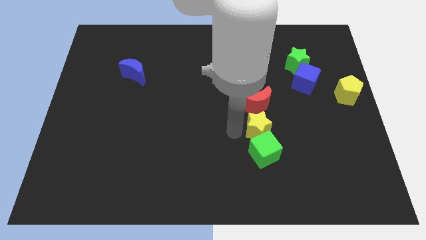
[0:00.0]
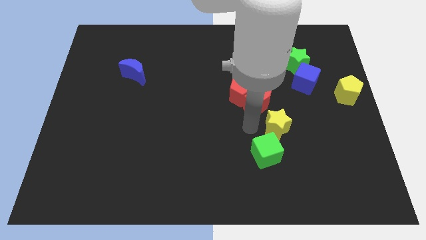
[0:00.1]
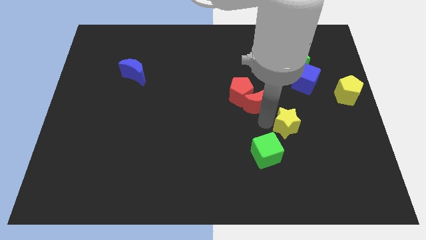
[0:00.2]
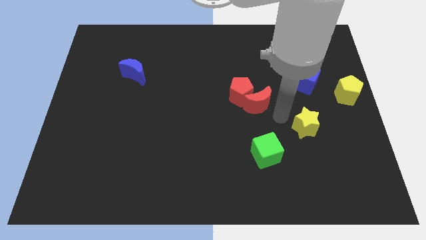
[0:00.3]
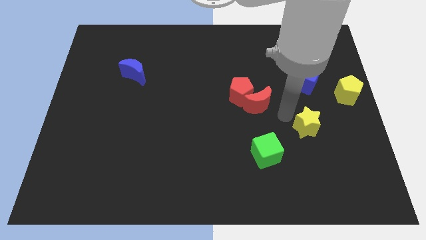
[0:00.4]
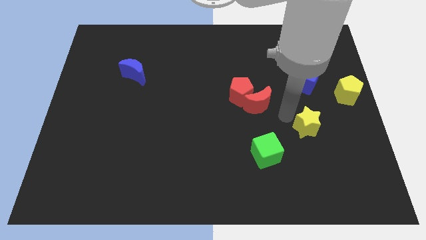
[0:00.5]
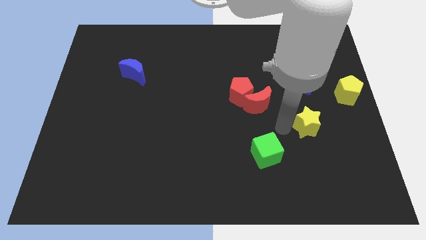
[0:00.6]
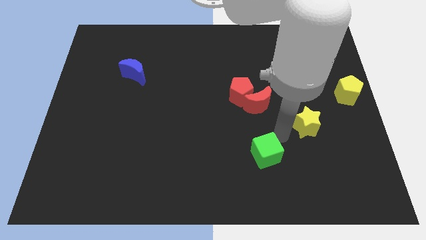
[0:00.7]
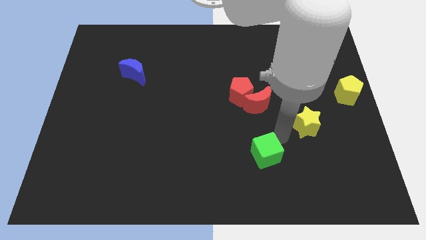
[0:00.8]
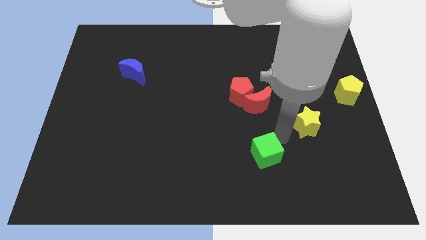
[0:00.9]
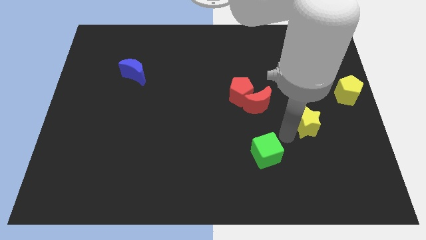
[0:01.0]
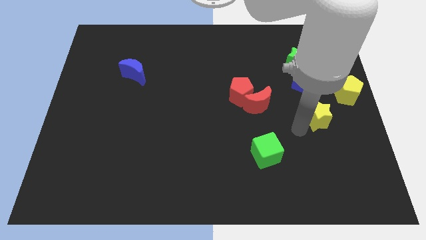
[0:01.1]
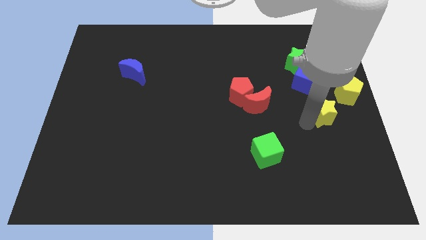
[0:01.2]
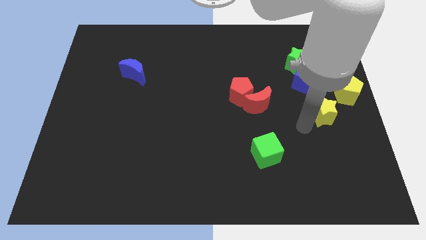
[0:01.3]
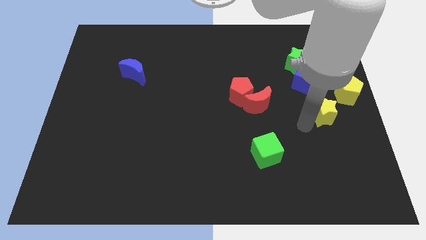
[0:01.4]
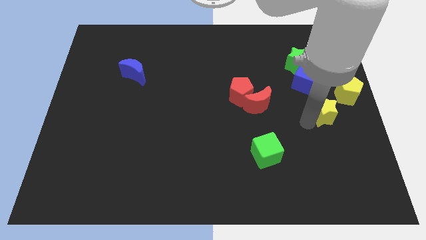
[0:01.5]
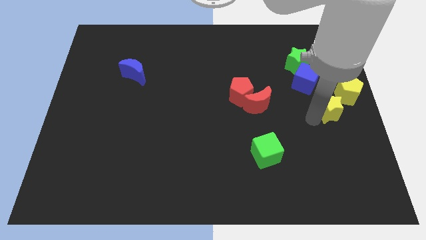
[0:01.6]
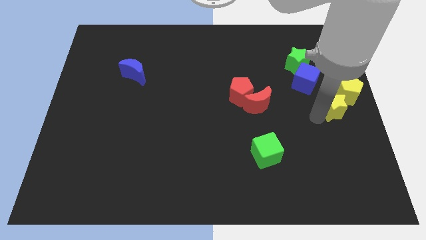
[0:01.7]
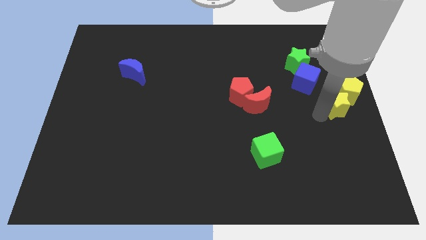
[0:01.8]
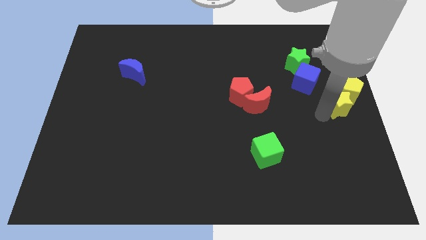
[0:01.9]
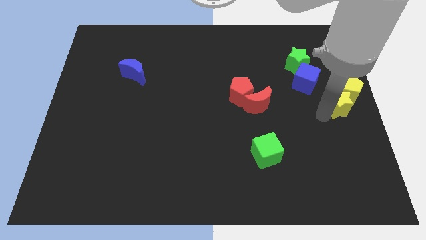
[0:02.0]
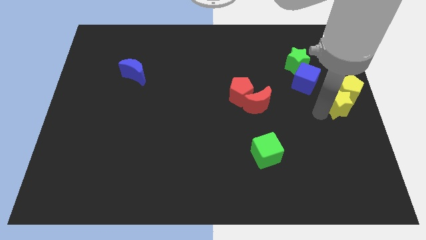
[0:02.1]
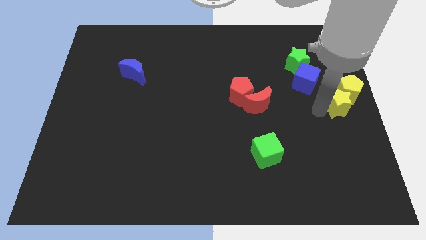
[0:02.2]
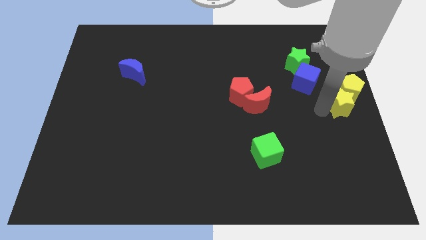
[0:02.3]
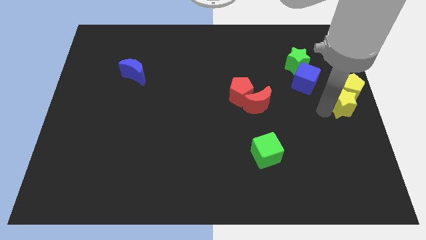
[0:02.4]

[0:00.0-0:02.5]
slide the yellow star into the yellow pentagon

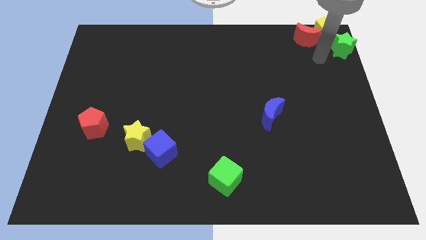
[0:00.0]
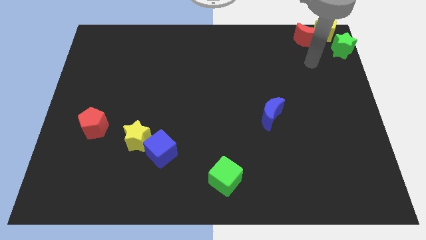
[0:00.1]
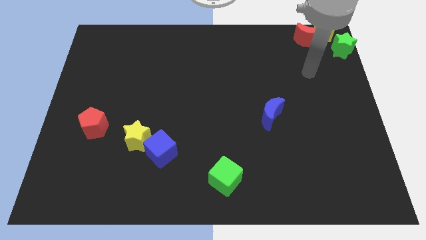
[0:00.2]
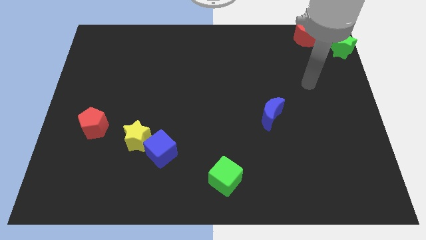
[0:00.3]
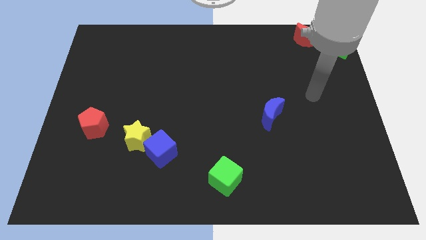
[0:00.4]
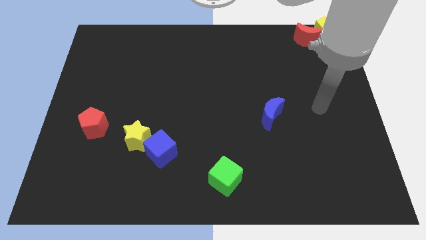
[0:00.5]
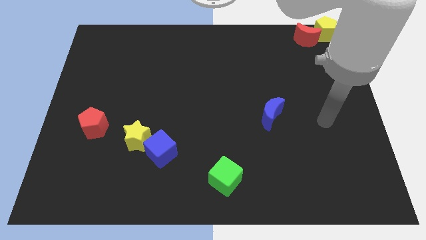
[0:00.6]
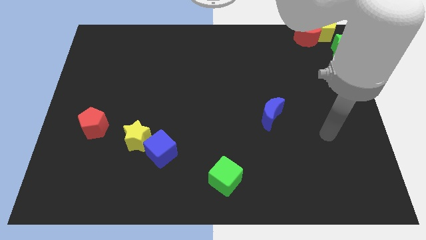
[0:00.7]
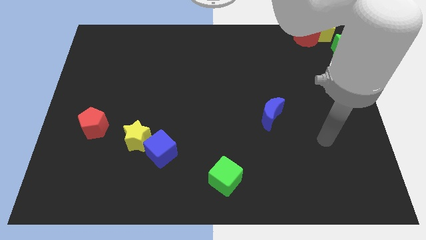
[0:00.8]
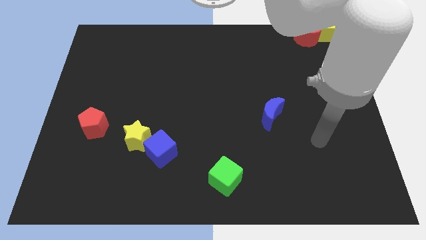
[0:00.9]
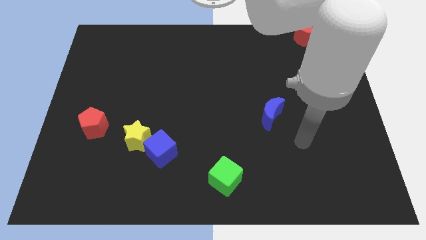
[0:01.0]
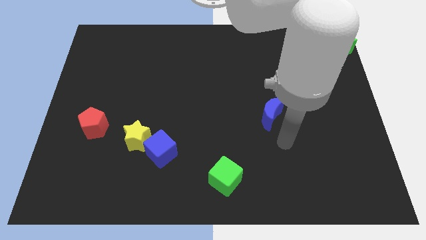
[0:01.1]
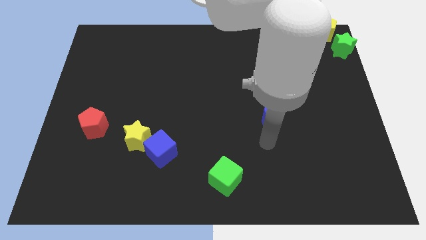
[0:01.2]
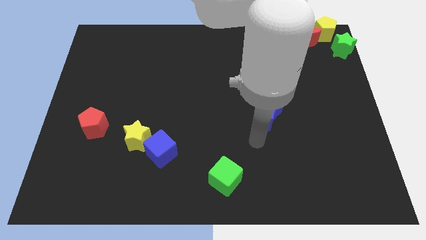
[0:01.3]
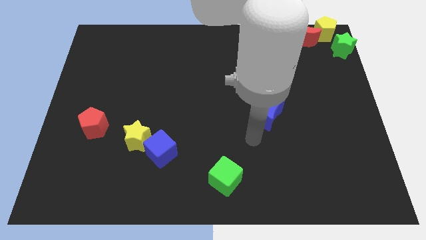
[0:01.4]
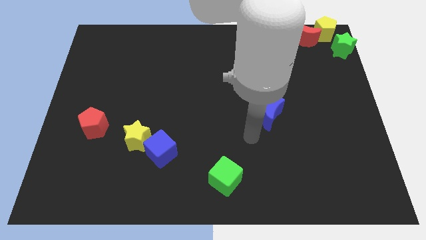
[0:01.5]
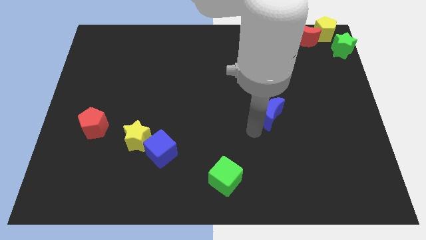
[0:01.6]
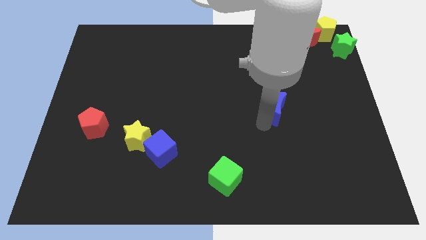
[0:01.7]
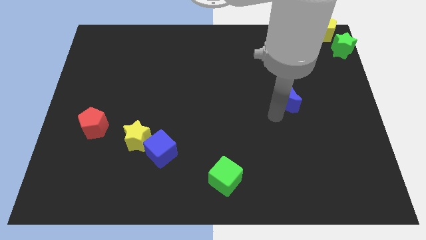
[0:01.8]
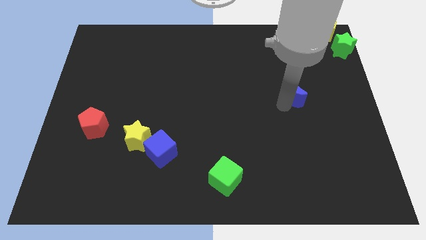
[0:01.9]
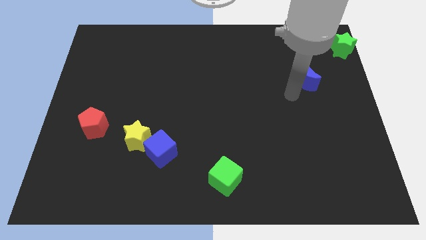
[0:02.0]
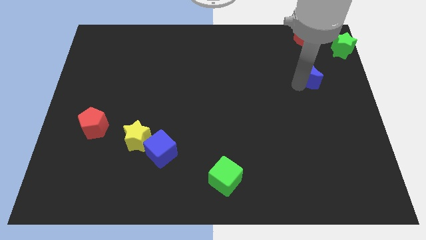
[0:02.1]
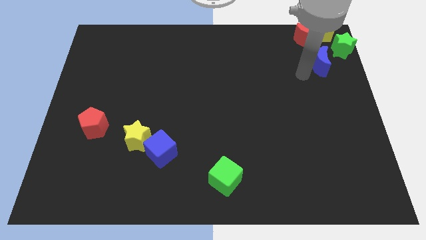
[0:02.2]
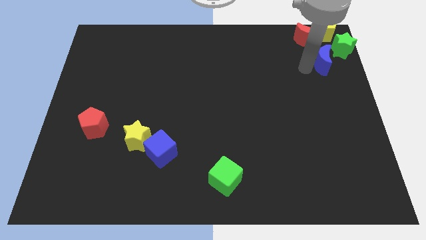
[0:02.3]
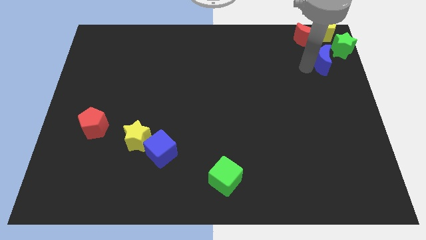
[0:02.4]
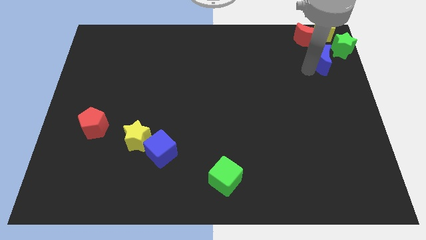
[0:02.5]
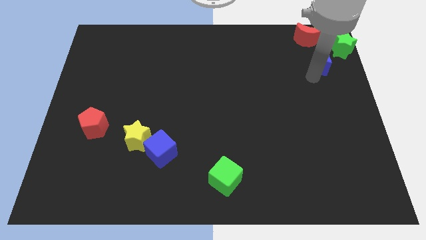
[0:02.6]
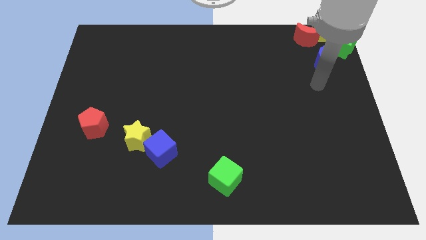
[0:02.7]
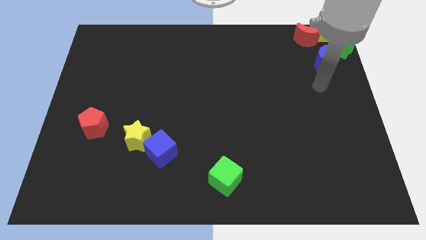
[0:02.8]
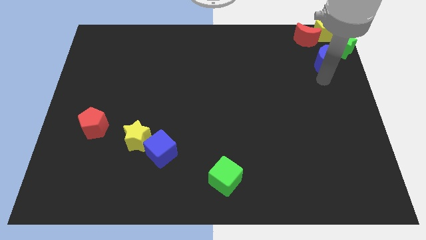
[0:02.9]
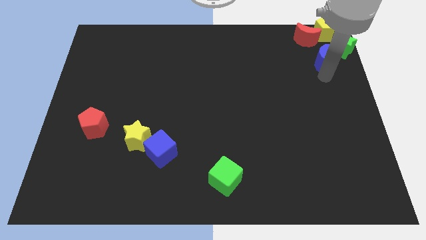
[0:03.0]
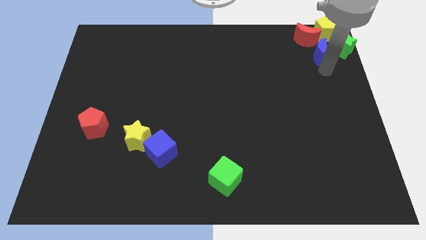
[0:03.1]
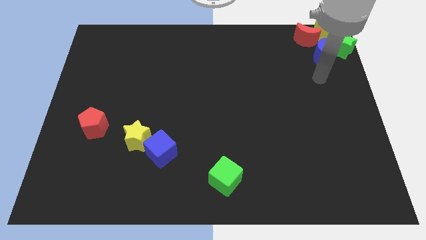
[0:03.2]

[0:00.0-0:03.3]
move the blue crescent towards the group of blocks

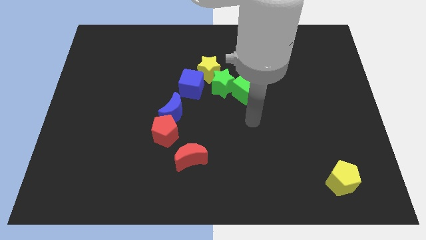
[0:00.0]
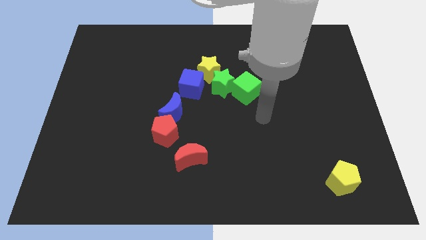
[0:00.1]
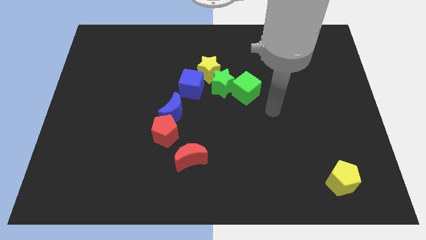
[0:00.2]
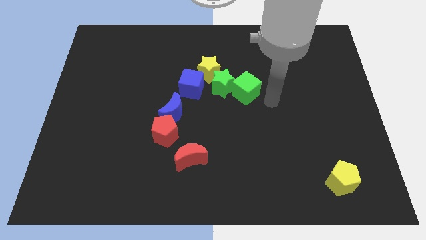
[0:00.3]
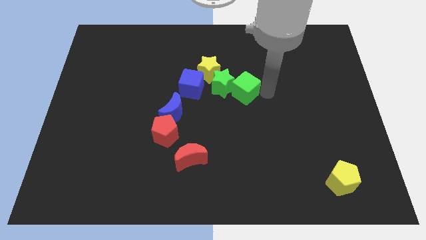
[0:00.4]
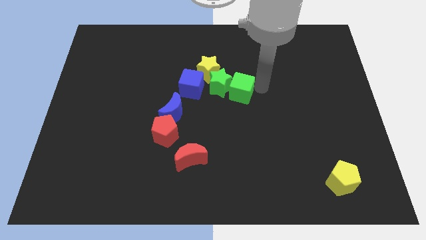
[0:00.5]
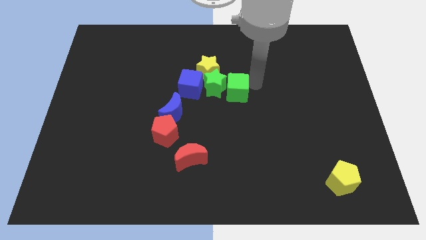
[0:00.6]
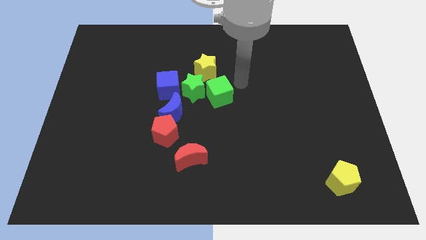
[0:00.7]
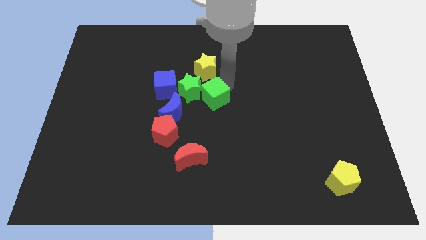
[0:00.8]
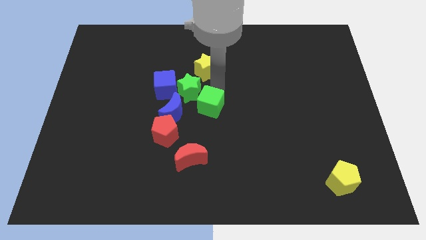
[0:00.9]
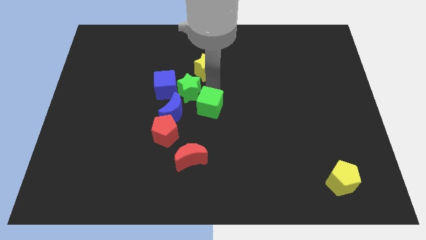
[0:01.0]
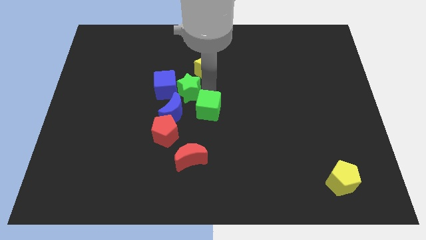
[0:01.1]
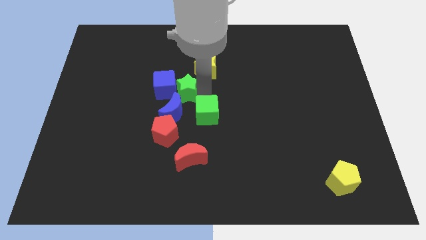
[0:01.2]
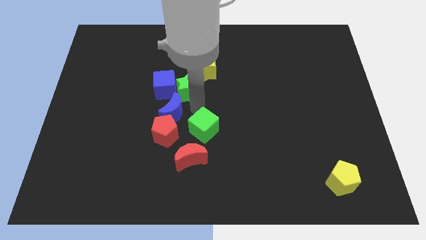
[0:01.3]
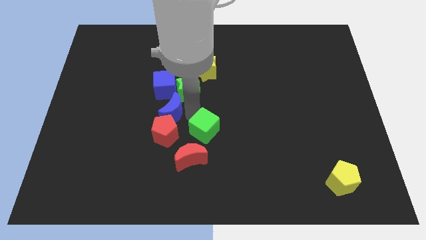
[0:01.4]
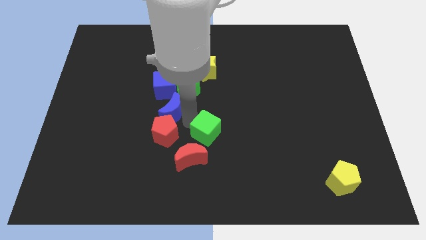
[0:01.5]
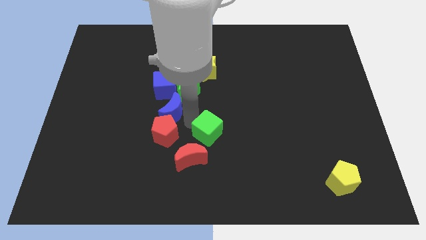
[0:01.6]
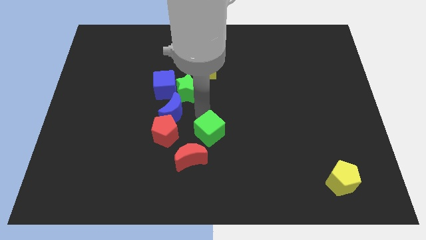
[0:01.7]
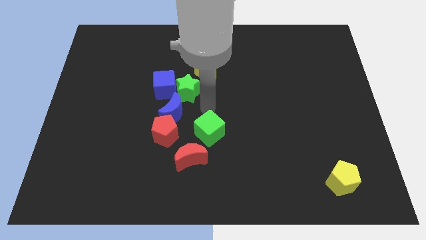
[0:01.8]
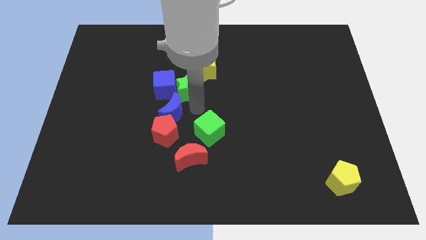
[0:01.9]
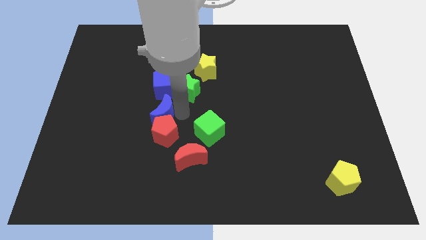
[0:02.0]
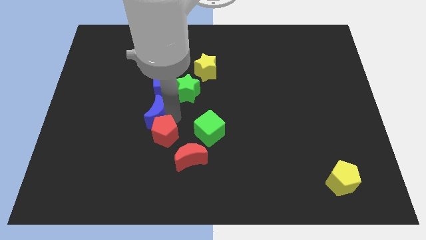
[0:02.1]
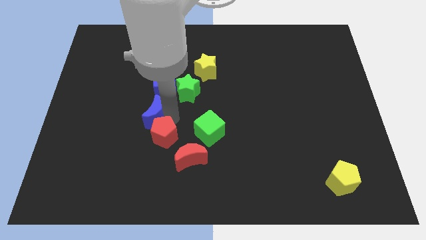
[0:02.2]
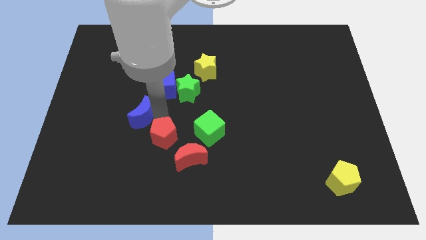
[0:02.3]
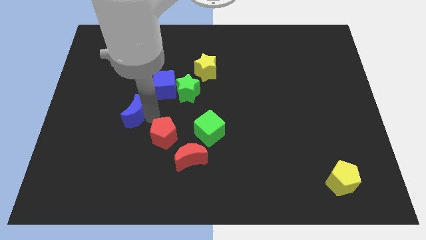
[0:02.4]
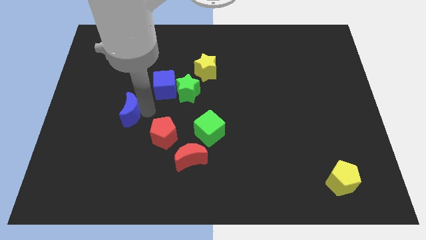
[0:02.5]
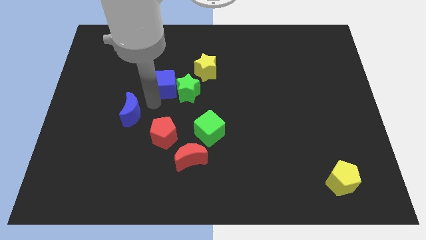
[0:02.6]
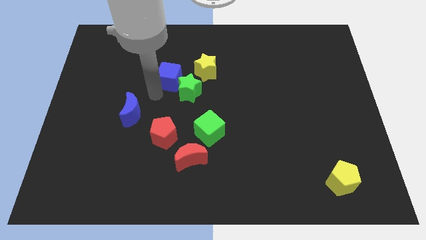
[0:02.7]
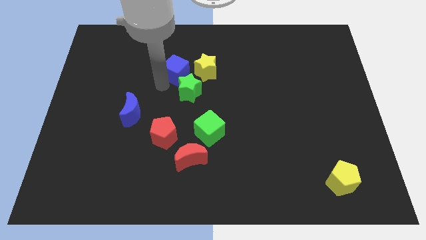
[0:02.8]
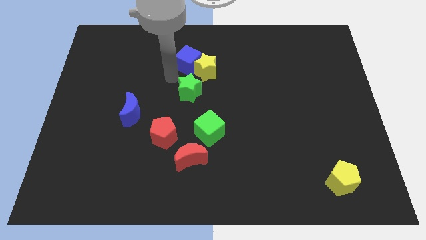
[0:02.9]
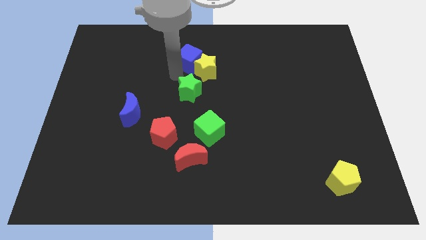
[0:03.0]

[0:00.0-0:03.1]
split the groupo of blocks from each other
